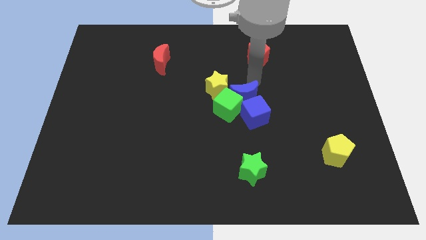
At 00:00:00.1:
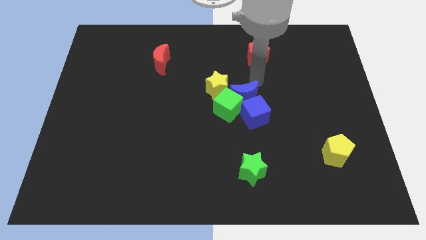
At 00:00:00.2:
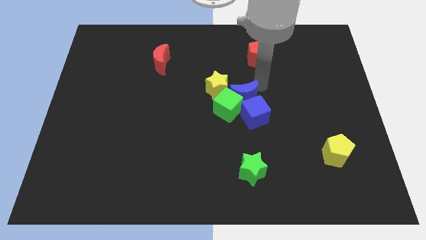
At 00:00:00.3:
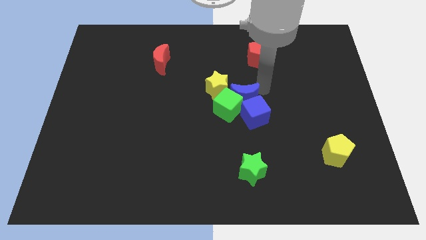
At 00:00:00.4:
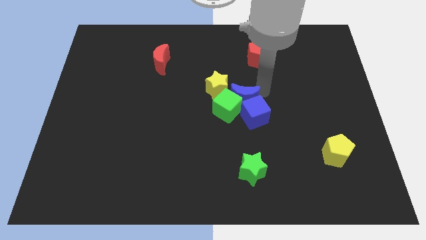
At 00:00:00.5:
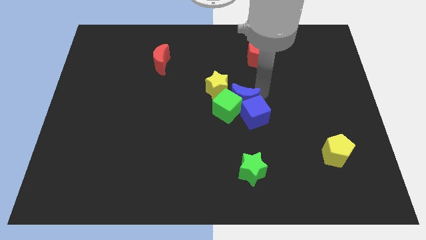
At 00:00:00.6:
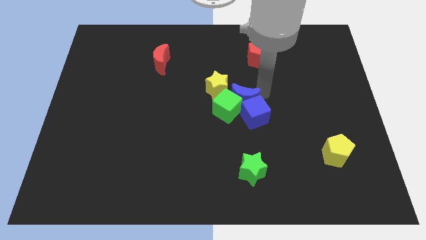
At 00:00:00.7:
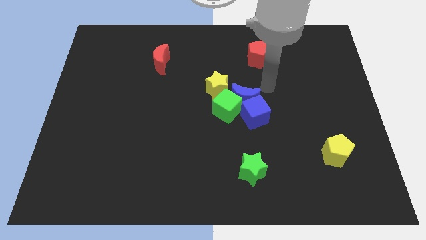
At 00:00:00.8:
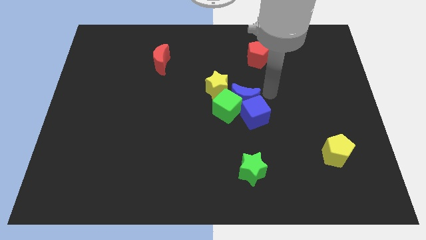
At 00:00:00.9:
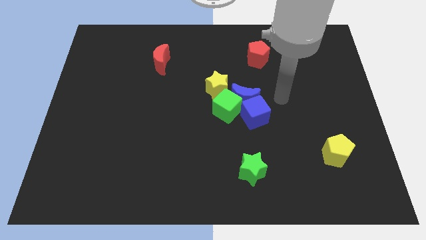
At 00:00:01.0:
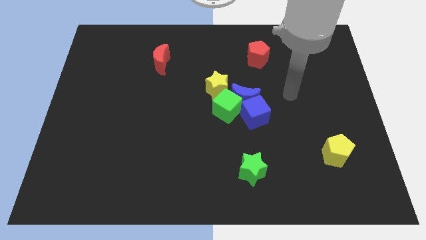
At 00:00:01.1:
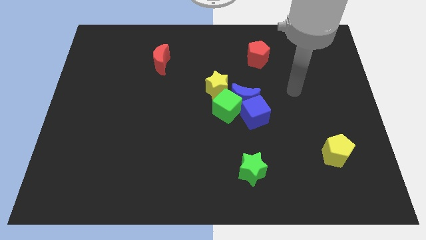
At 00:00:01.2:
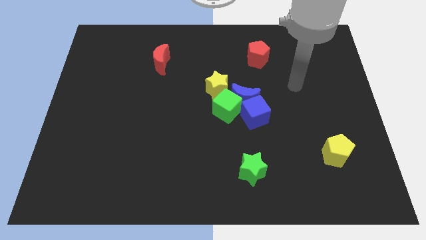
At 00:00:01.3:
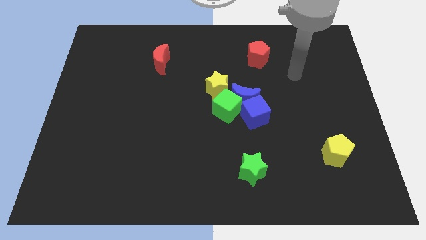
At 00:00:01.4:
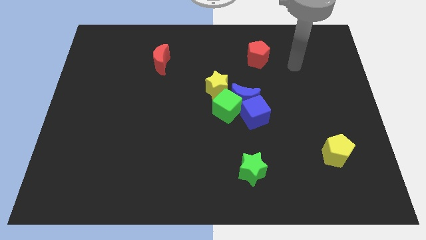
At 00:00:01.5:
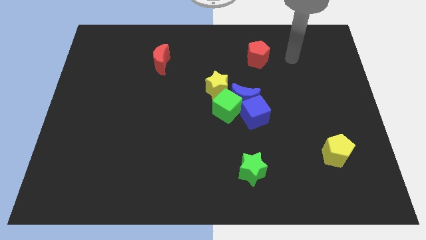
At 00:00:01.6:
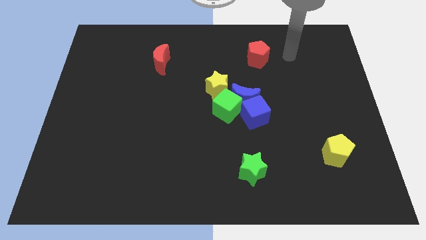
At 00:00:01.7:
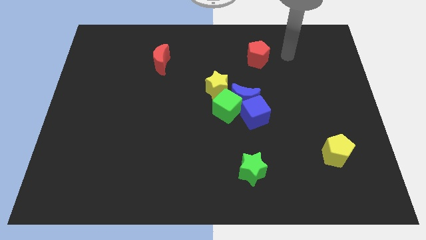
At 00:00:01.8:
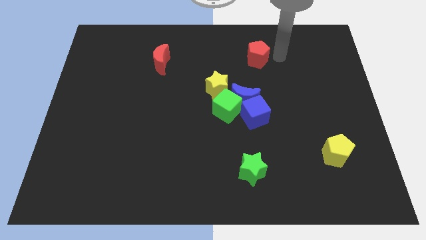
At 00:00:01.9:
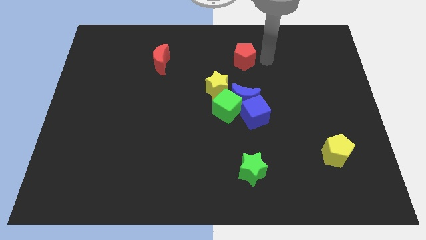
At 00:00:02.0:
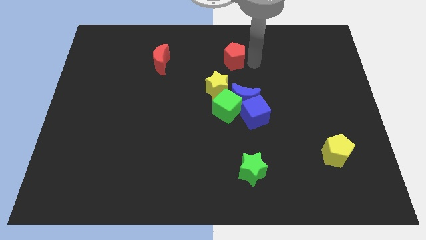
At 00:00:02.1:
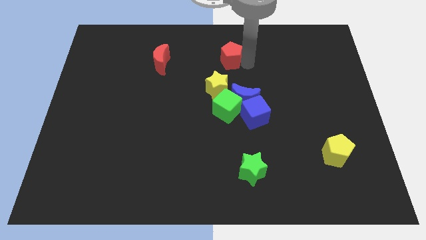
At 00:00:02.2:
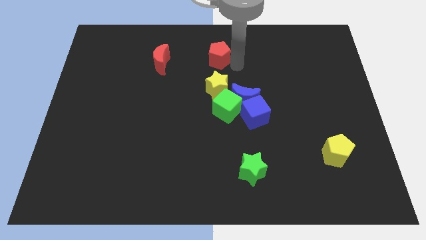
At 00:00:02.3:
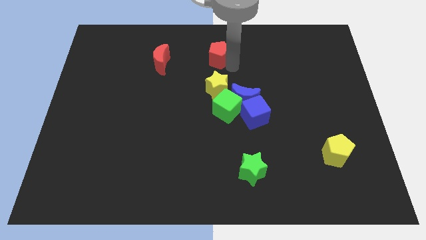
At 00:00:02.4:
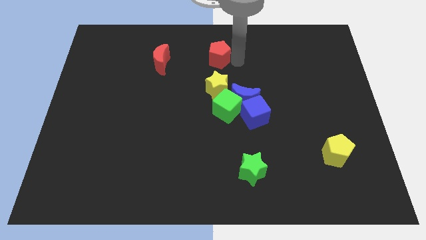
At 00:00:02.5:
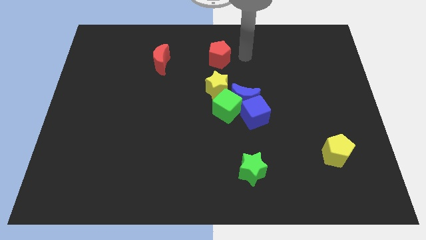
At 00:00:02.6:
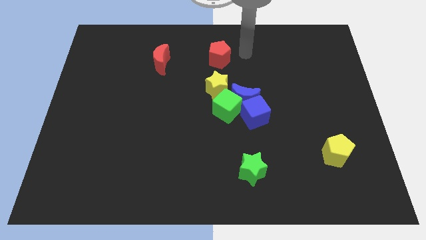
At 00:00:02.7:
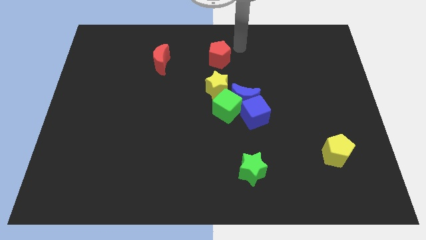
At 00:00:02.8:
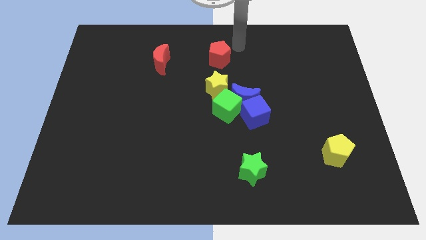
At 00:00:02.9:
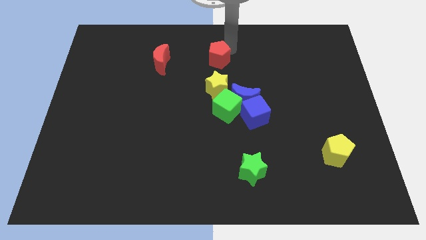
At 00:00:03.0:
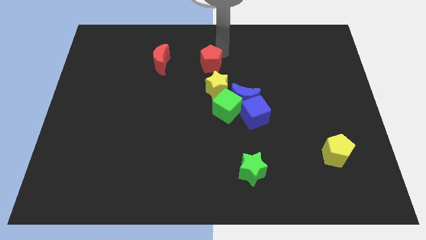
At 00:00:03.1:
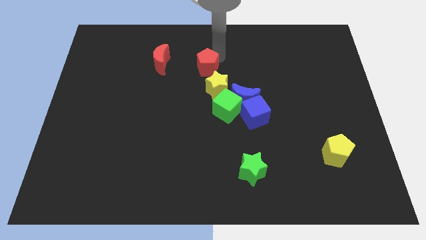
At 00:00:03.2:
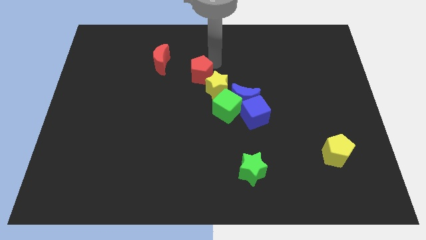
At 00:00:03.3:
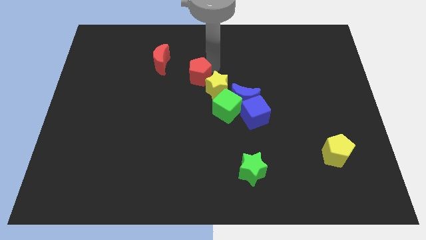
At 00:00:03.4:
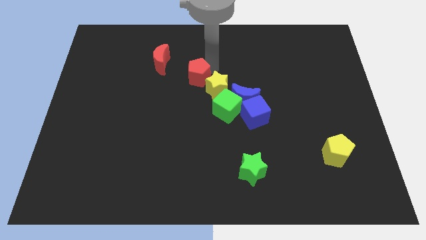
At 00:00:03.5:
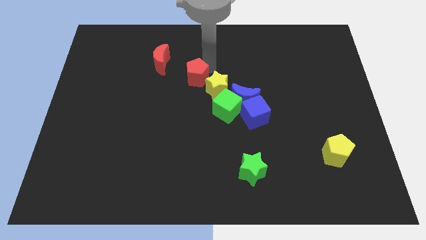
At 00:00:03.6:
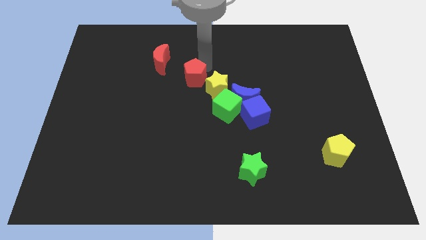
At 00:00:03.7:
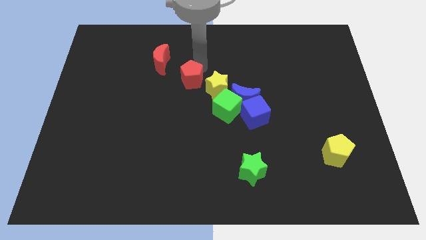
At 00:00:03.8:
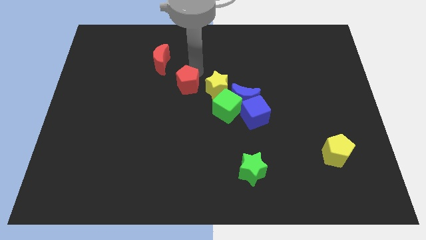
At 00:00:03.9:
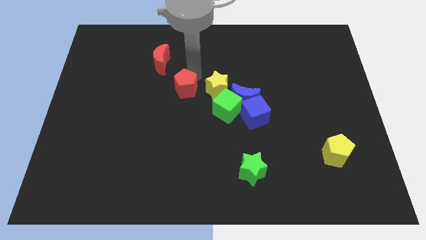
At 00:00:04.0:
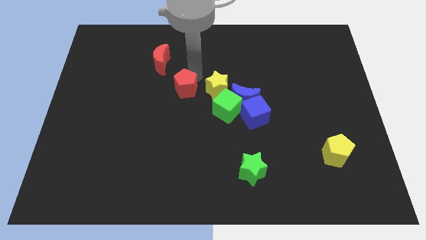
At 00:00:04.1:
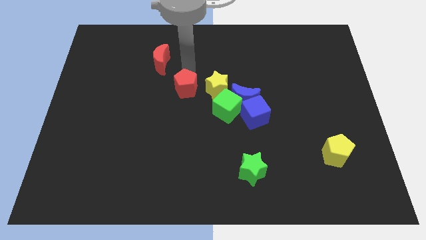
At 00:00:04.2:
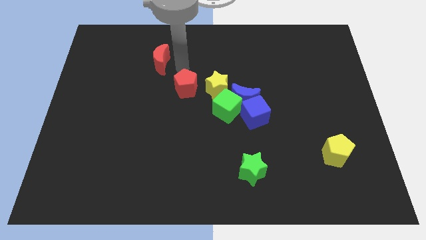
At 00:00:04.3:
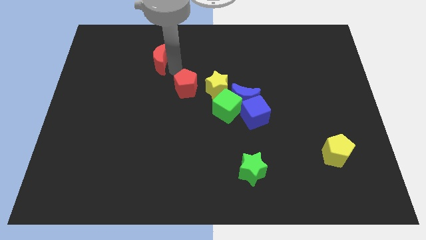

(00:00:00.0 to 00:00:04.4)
move the red pentagon left to the yellow star

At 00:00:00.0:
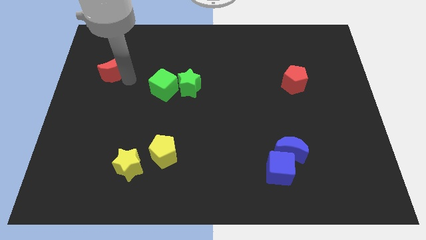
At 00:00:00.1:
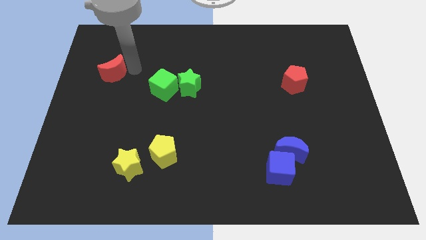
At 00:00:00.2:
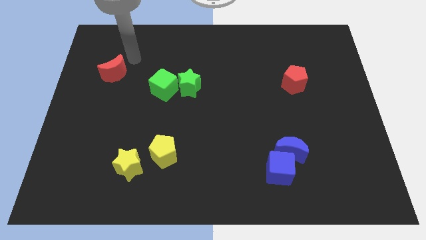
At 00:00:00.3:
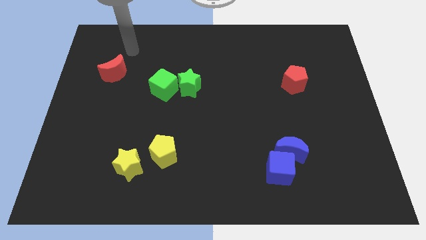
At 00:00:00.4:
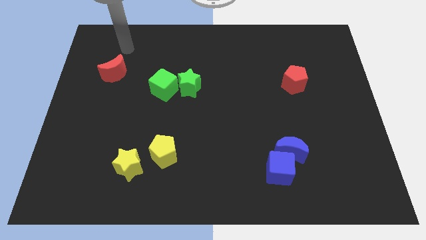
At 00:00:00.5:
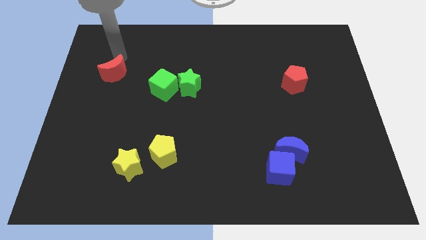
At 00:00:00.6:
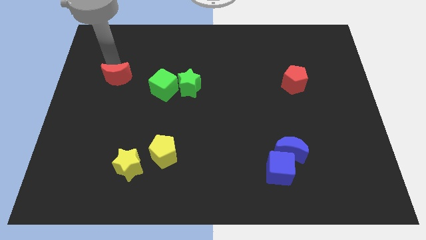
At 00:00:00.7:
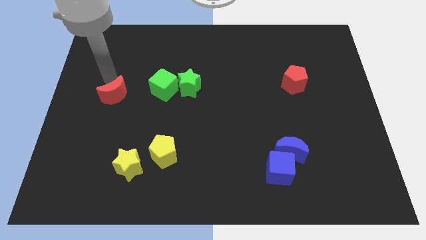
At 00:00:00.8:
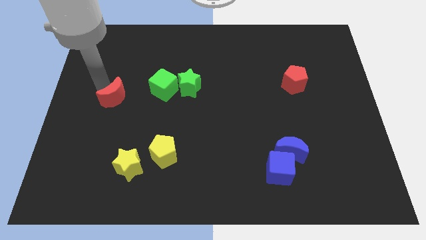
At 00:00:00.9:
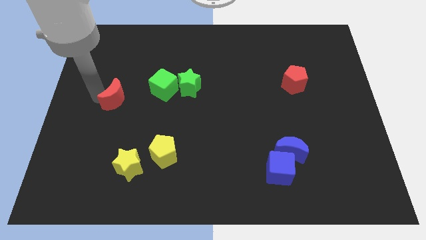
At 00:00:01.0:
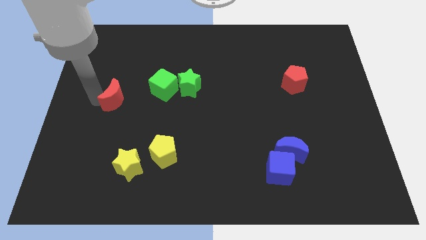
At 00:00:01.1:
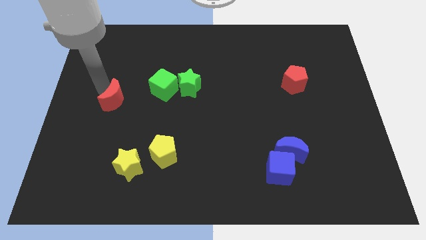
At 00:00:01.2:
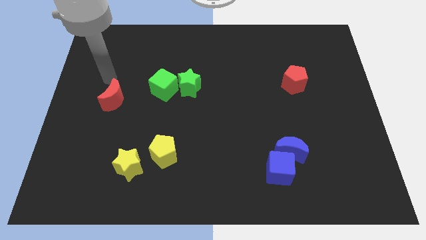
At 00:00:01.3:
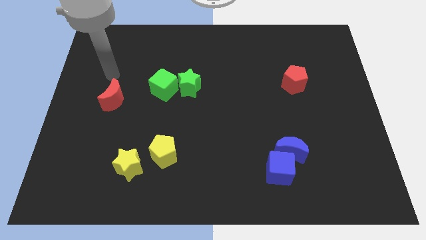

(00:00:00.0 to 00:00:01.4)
push the red crescent downwards

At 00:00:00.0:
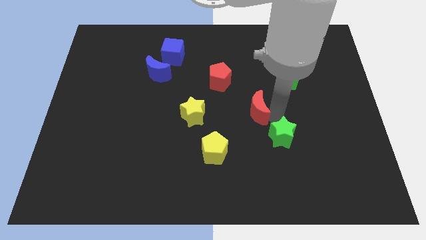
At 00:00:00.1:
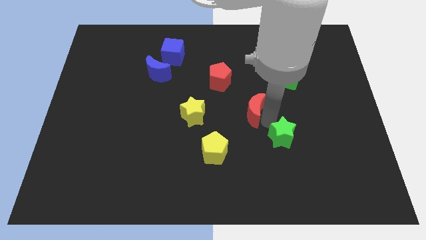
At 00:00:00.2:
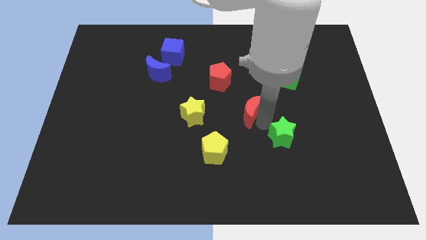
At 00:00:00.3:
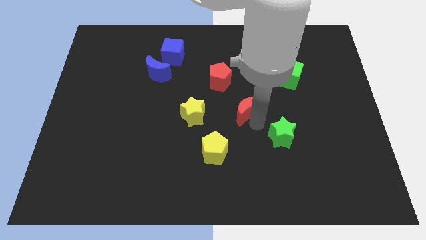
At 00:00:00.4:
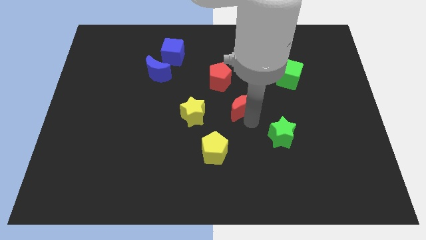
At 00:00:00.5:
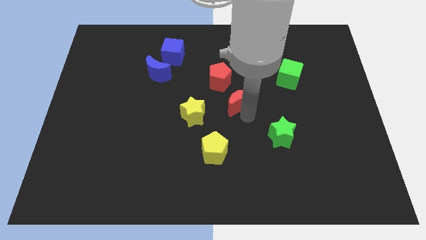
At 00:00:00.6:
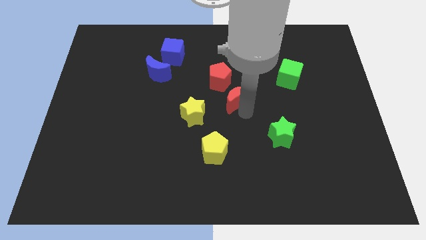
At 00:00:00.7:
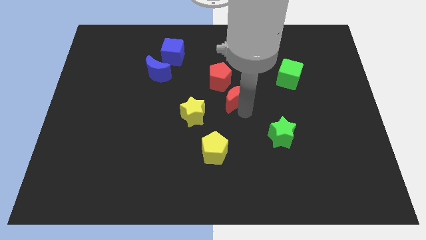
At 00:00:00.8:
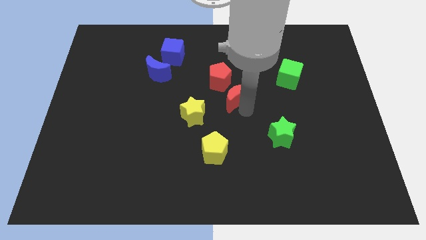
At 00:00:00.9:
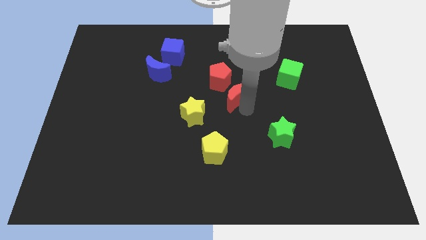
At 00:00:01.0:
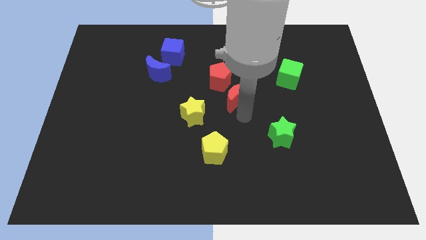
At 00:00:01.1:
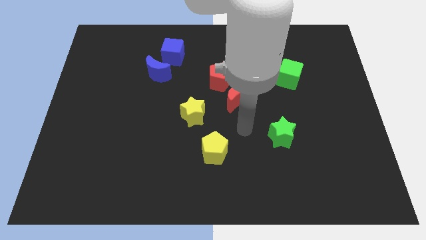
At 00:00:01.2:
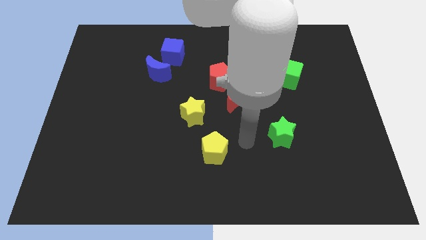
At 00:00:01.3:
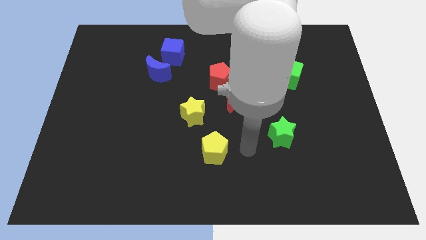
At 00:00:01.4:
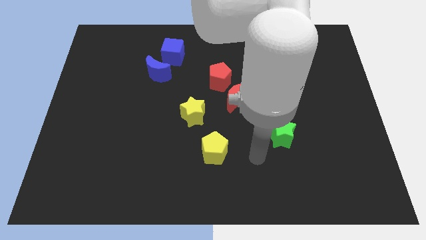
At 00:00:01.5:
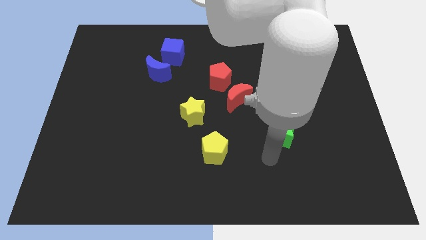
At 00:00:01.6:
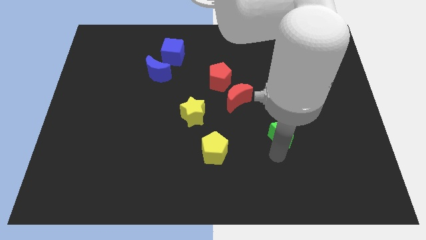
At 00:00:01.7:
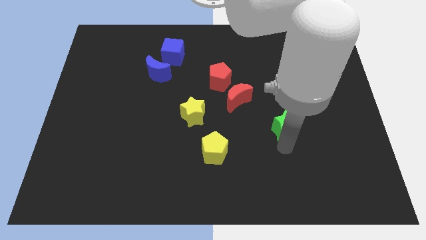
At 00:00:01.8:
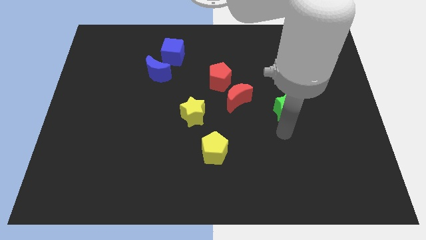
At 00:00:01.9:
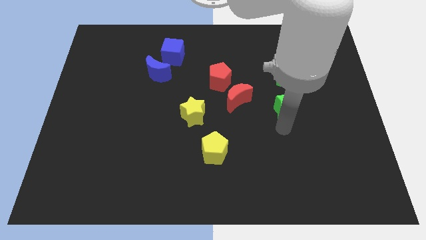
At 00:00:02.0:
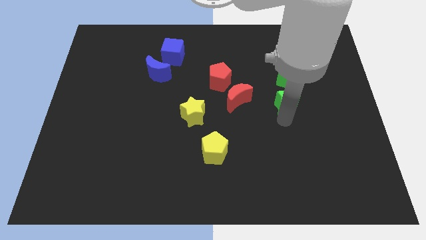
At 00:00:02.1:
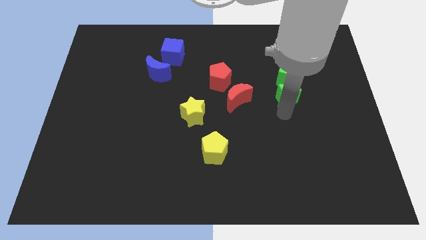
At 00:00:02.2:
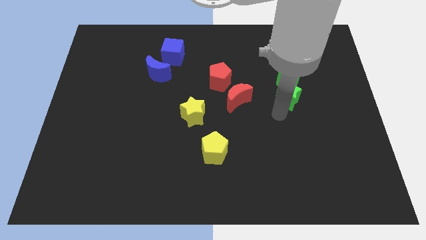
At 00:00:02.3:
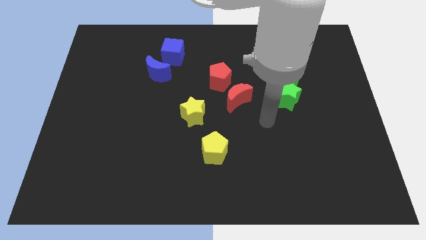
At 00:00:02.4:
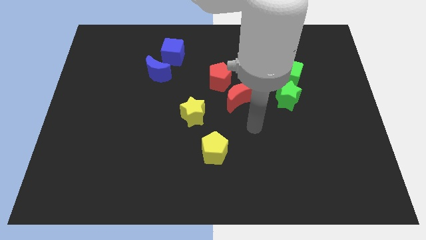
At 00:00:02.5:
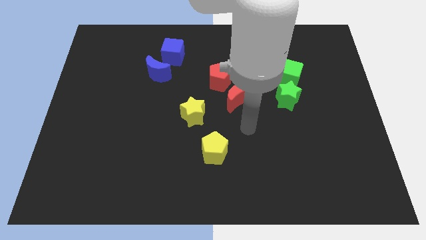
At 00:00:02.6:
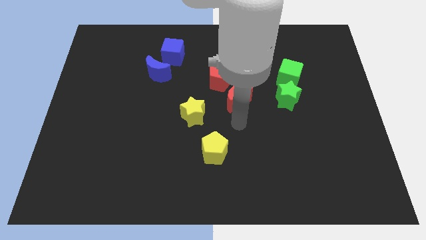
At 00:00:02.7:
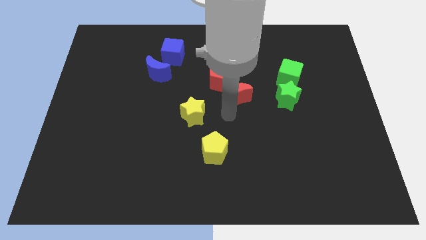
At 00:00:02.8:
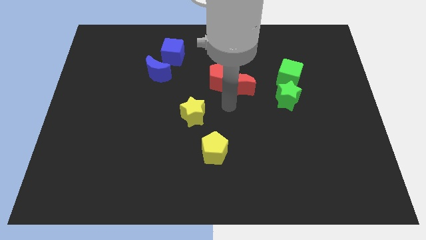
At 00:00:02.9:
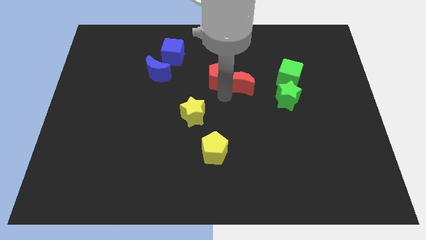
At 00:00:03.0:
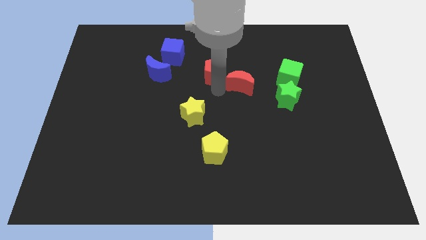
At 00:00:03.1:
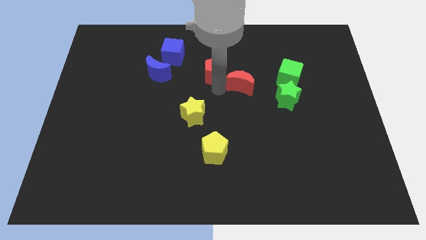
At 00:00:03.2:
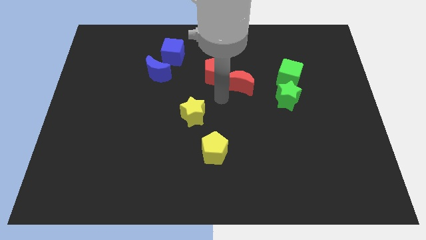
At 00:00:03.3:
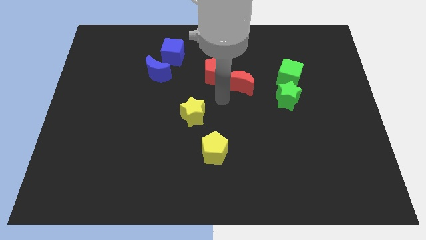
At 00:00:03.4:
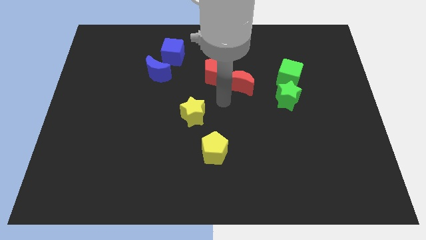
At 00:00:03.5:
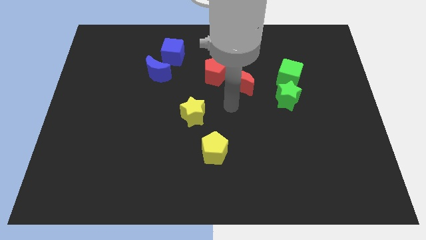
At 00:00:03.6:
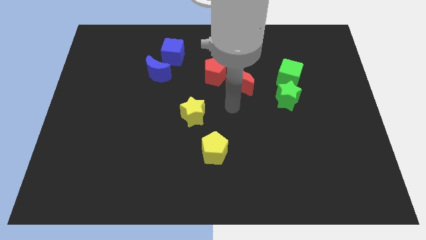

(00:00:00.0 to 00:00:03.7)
make the red and green blocks together at the top side
